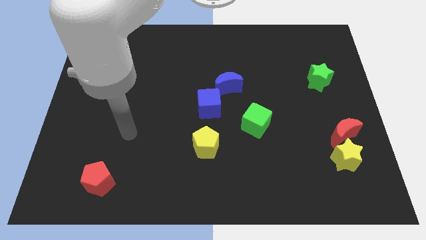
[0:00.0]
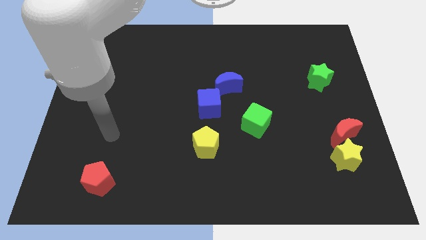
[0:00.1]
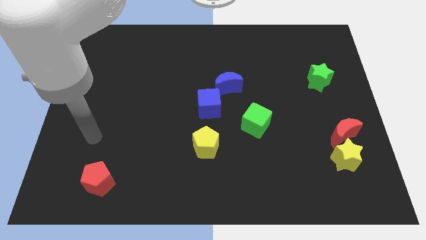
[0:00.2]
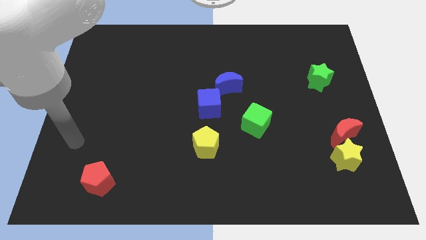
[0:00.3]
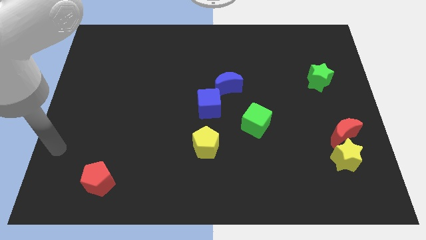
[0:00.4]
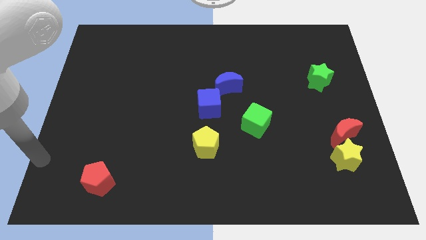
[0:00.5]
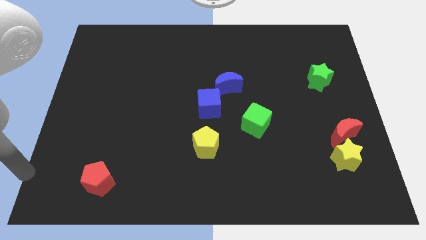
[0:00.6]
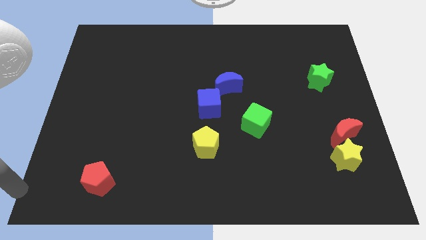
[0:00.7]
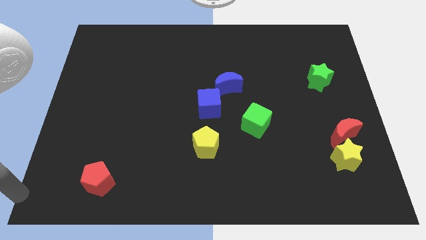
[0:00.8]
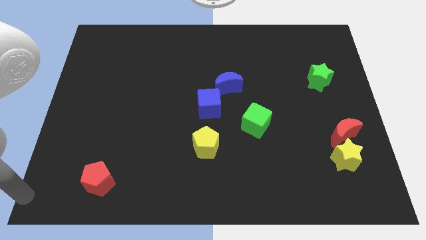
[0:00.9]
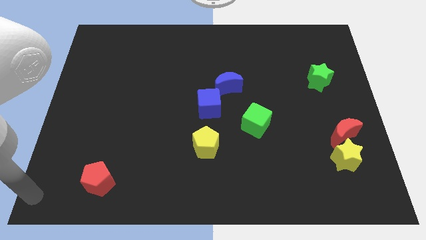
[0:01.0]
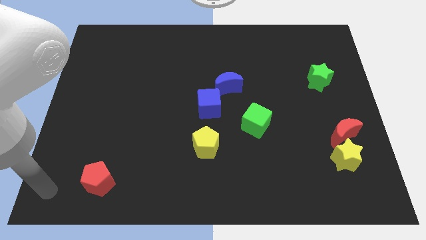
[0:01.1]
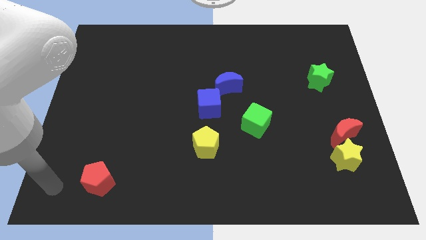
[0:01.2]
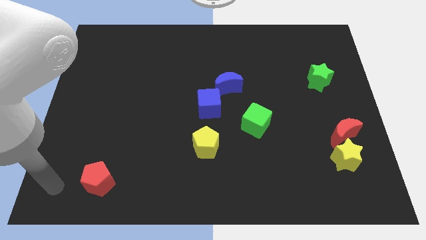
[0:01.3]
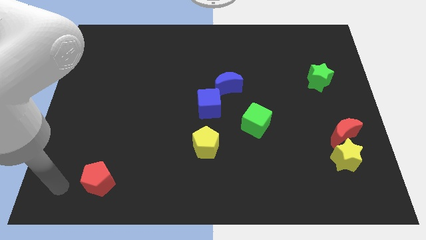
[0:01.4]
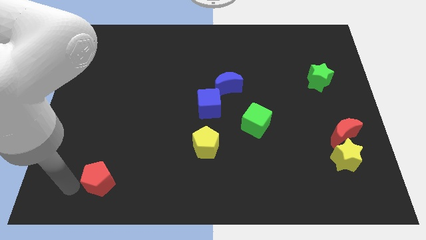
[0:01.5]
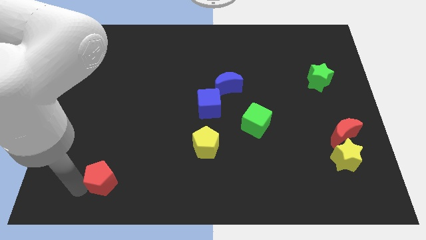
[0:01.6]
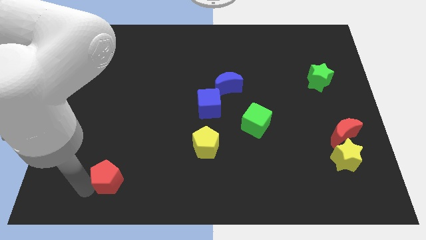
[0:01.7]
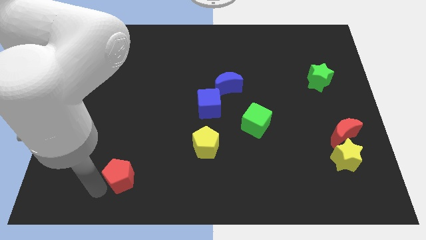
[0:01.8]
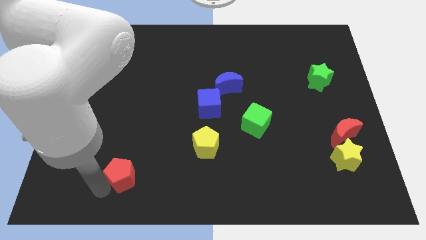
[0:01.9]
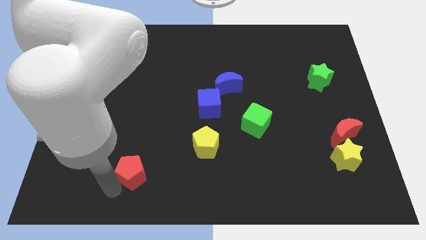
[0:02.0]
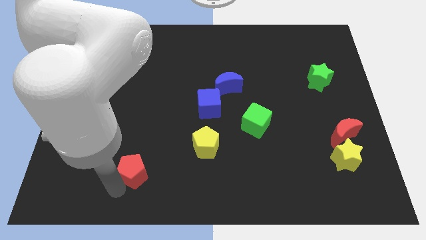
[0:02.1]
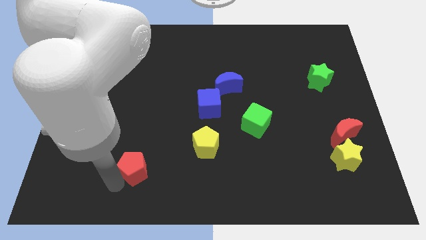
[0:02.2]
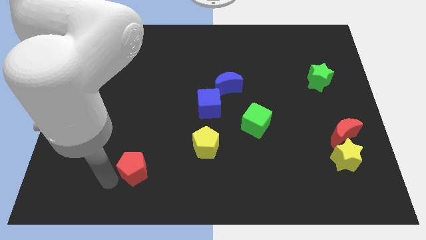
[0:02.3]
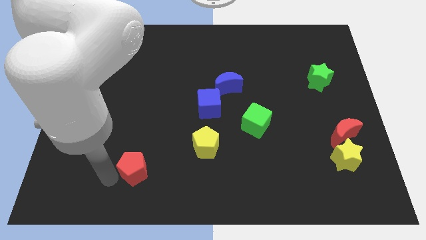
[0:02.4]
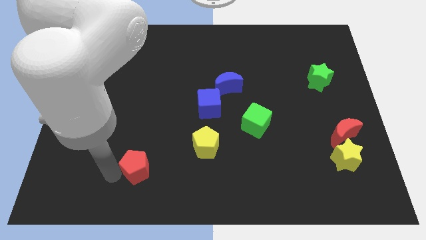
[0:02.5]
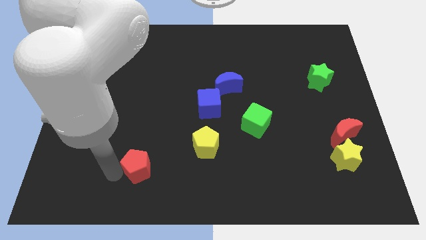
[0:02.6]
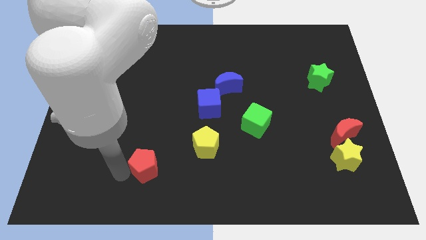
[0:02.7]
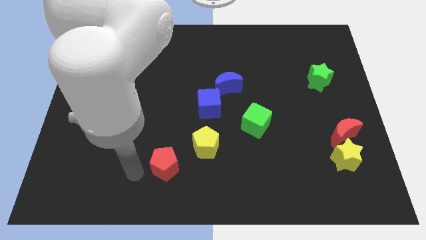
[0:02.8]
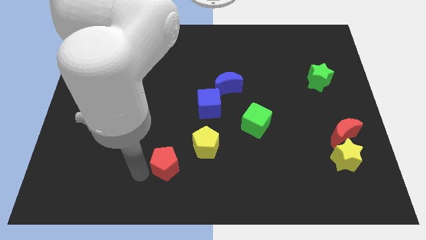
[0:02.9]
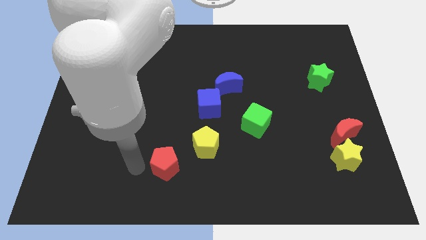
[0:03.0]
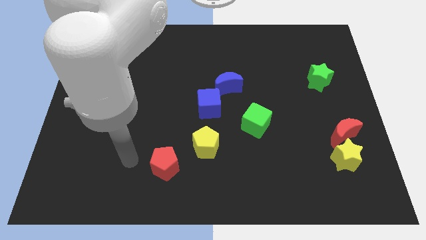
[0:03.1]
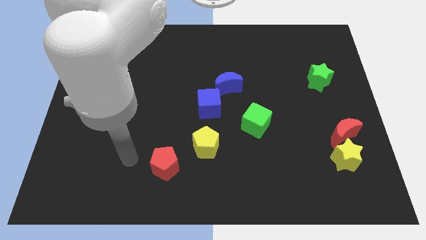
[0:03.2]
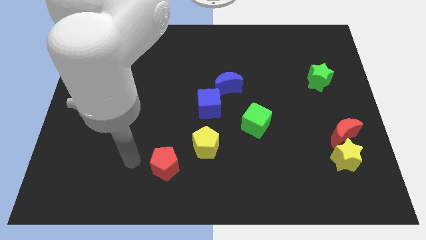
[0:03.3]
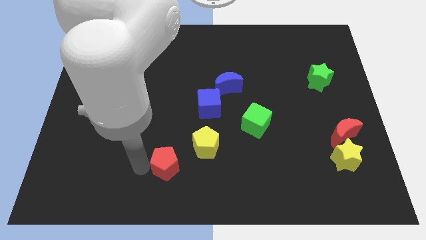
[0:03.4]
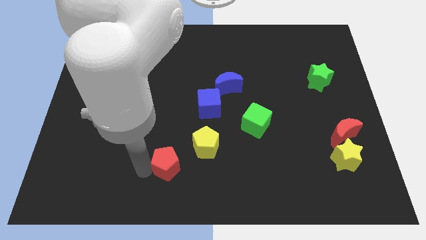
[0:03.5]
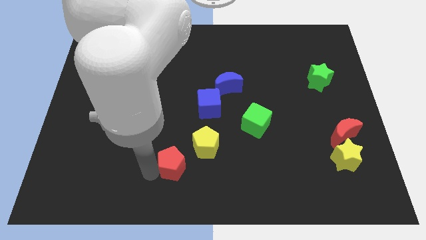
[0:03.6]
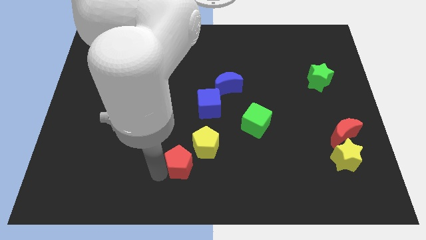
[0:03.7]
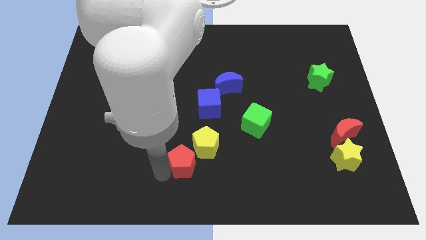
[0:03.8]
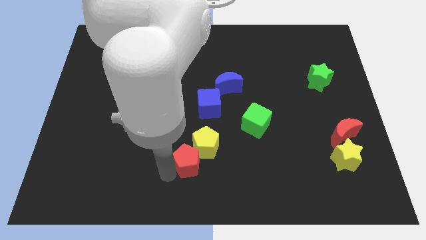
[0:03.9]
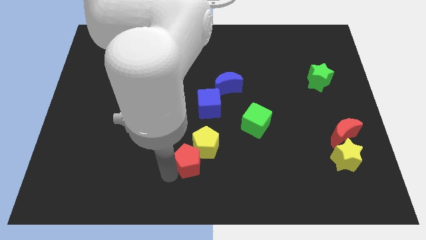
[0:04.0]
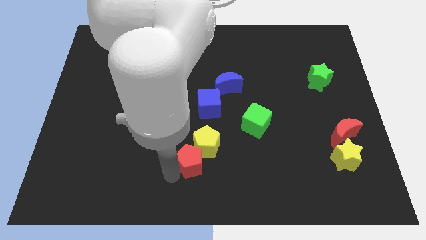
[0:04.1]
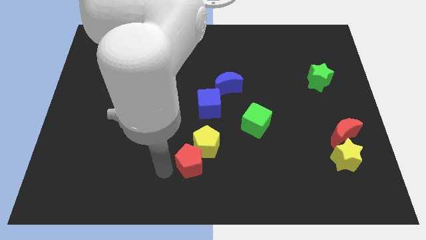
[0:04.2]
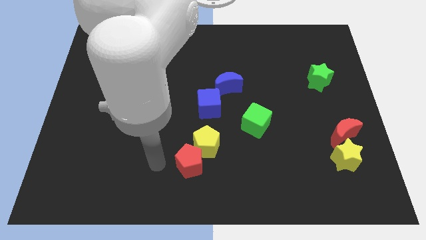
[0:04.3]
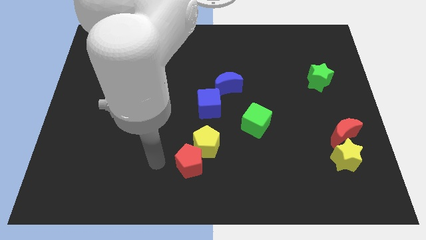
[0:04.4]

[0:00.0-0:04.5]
move red pentagon into yellow pentagon

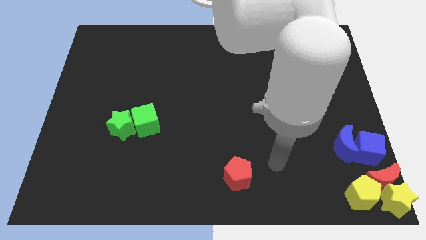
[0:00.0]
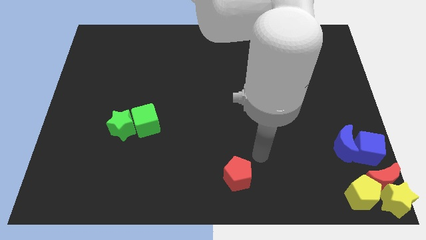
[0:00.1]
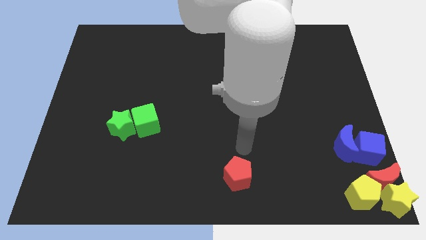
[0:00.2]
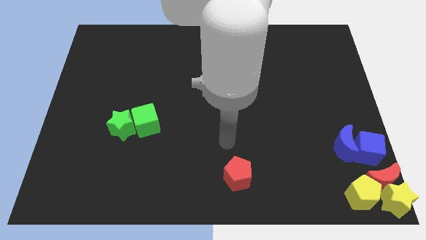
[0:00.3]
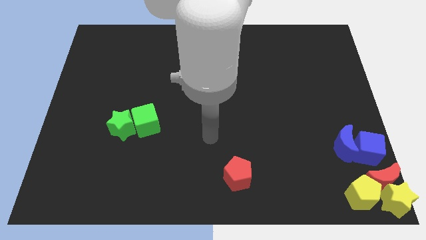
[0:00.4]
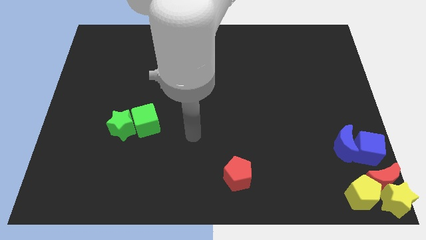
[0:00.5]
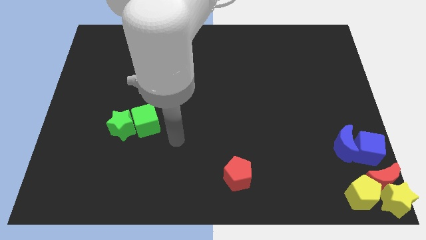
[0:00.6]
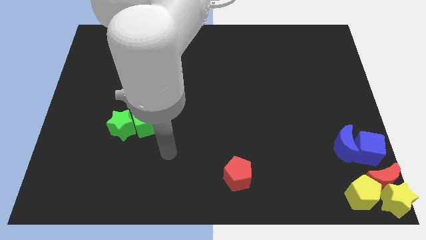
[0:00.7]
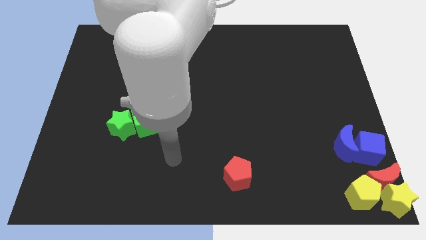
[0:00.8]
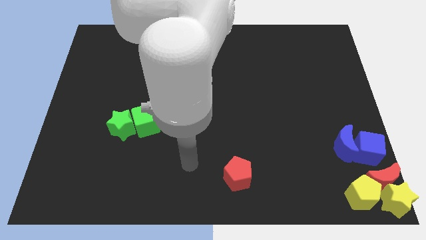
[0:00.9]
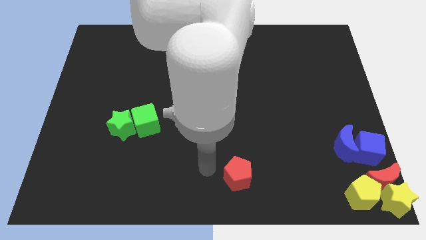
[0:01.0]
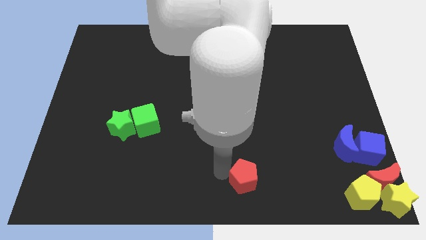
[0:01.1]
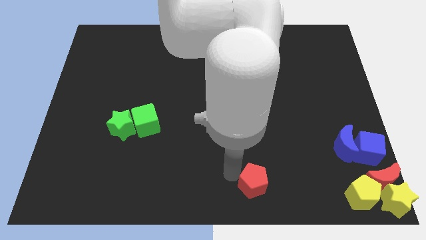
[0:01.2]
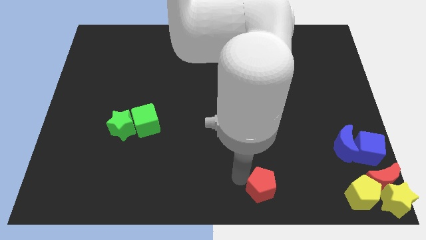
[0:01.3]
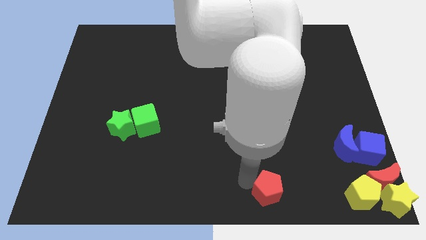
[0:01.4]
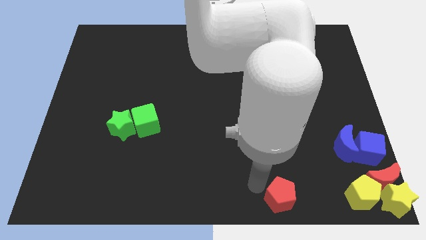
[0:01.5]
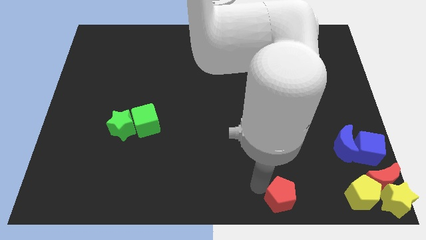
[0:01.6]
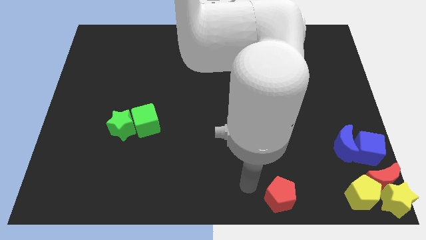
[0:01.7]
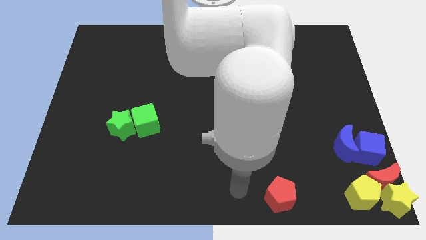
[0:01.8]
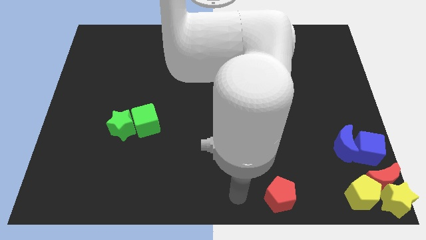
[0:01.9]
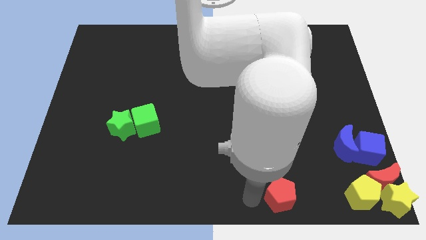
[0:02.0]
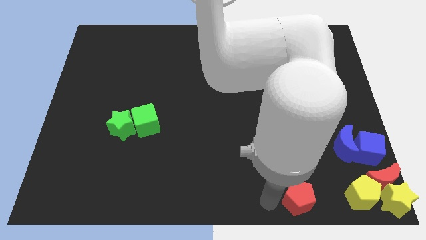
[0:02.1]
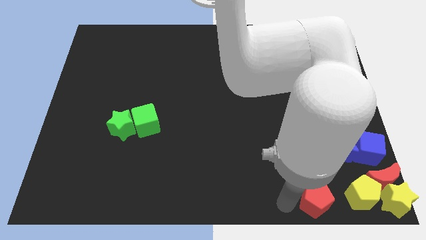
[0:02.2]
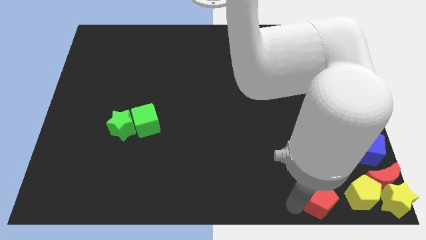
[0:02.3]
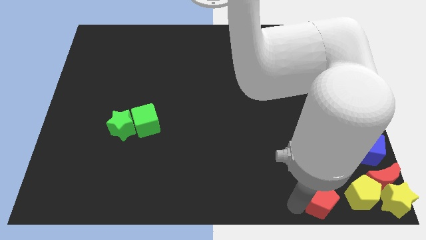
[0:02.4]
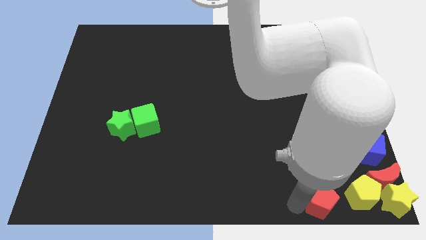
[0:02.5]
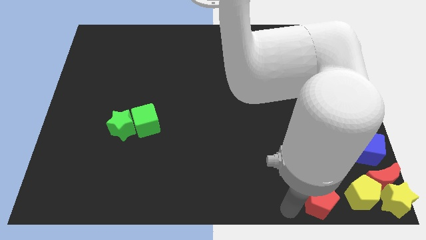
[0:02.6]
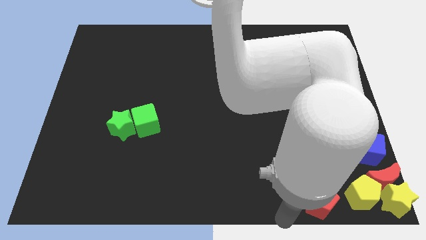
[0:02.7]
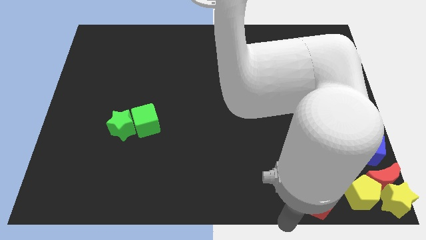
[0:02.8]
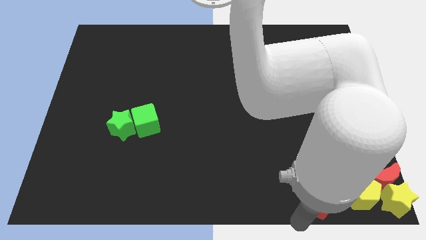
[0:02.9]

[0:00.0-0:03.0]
move the red pentagon to the left of the yellow pentagon

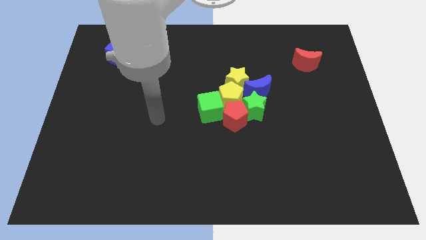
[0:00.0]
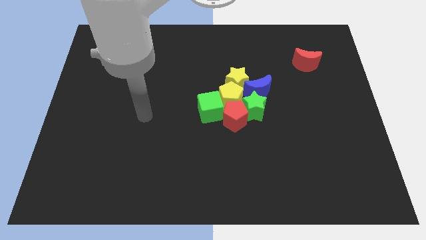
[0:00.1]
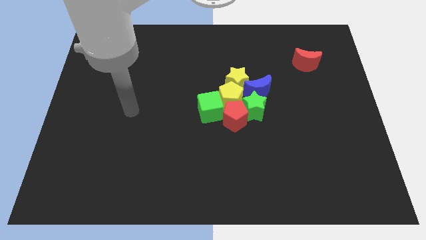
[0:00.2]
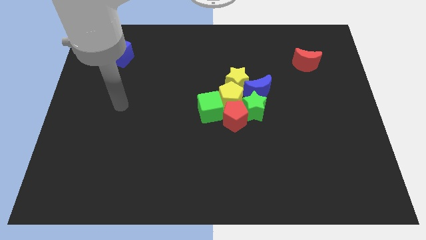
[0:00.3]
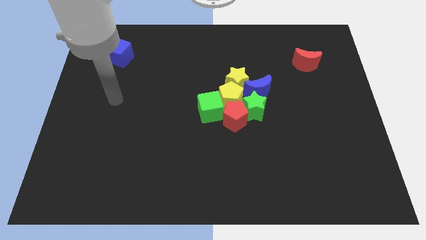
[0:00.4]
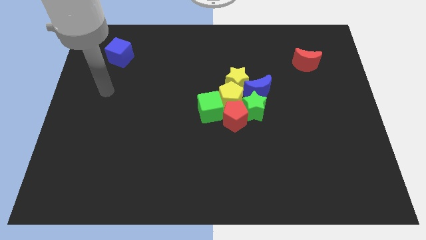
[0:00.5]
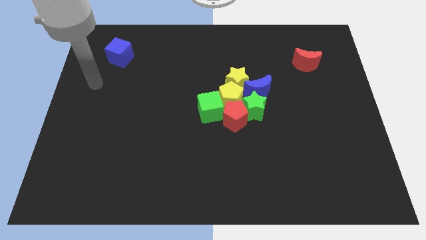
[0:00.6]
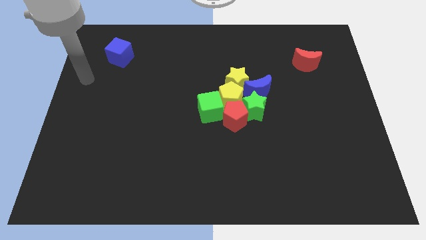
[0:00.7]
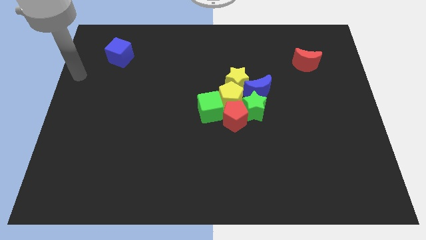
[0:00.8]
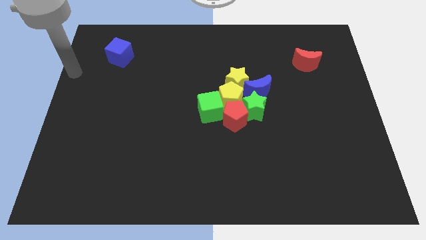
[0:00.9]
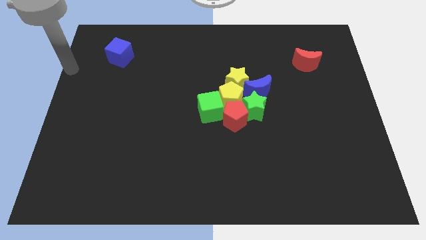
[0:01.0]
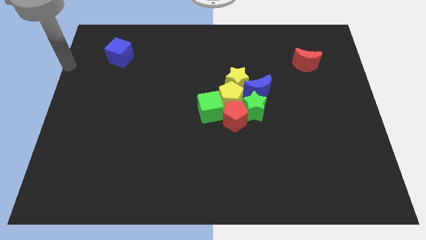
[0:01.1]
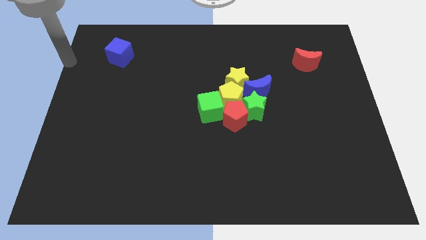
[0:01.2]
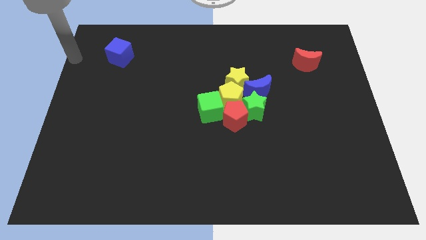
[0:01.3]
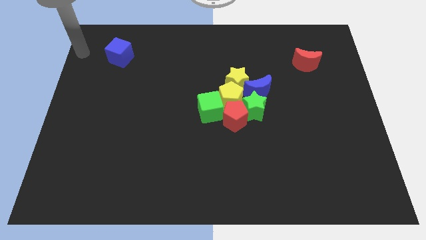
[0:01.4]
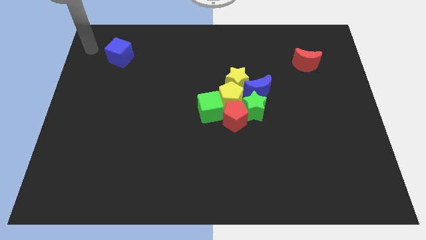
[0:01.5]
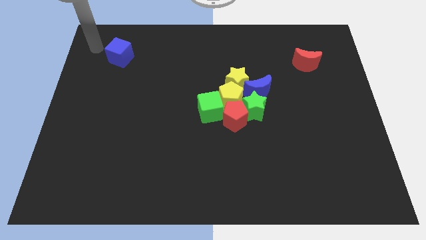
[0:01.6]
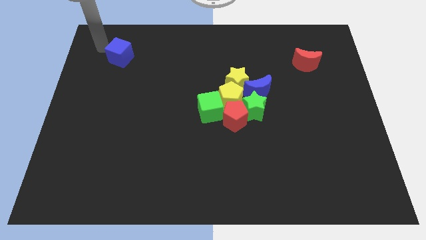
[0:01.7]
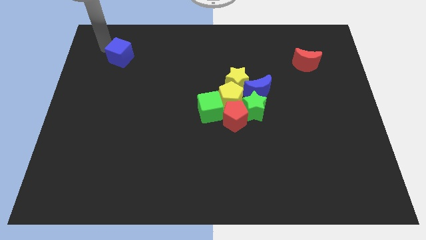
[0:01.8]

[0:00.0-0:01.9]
move your arm towards the blue cube
